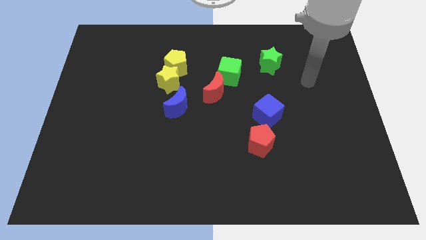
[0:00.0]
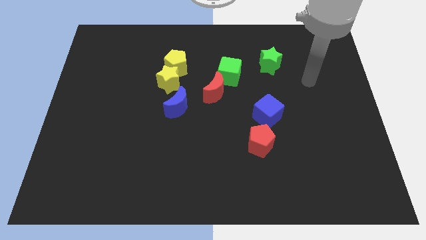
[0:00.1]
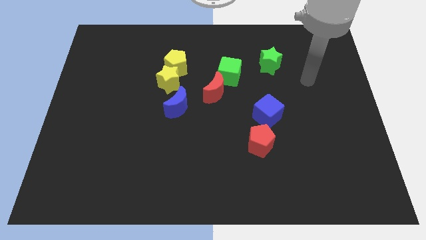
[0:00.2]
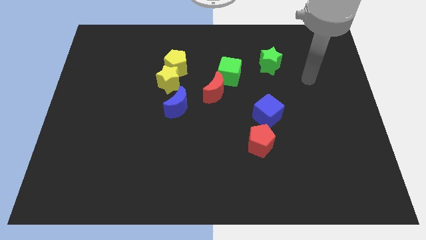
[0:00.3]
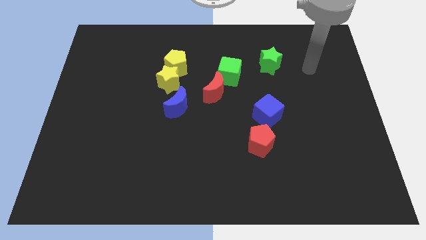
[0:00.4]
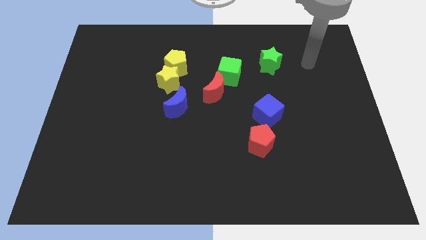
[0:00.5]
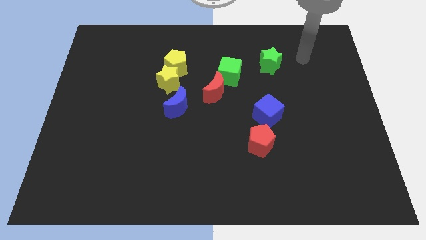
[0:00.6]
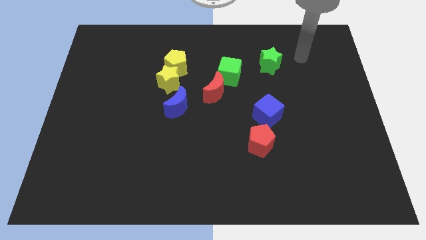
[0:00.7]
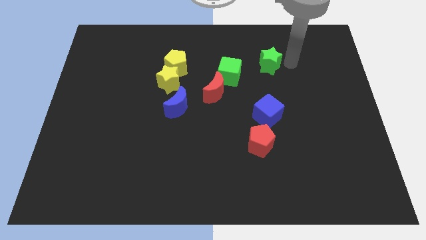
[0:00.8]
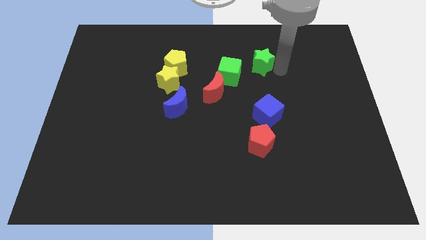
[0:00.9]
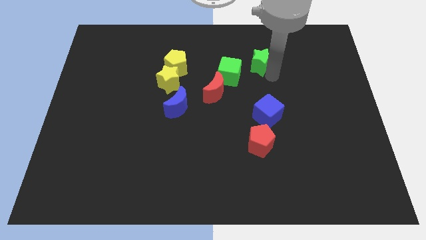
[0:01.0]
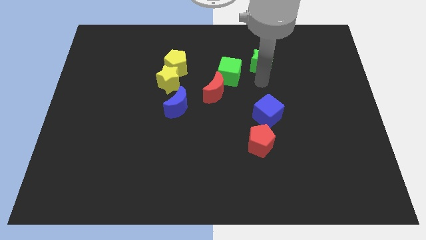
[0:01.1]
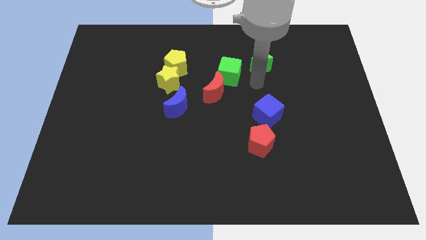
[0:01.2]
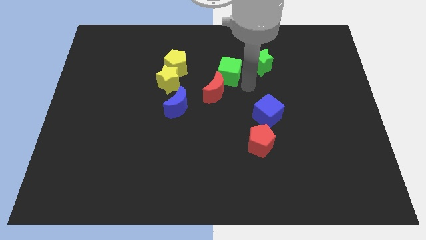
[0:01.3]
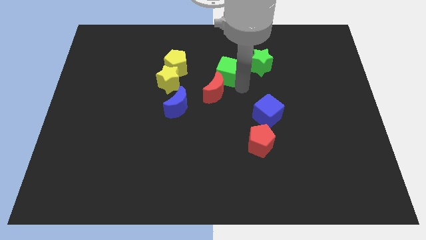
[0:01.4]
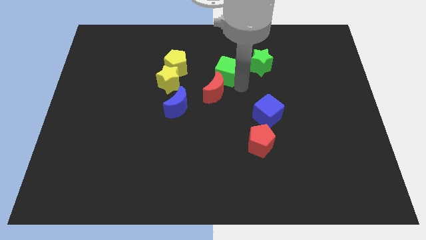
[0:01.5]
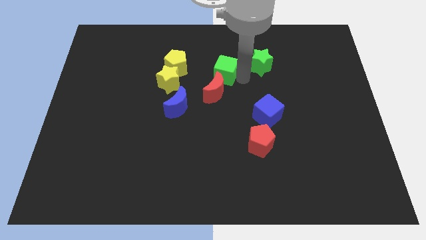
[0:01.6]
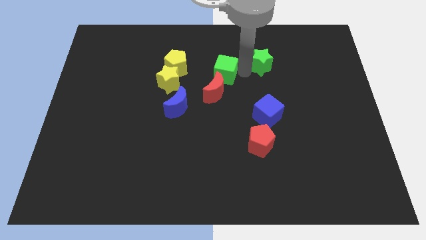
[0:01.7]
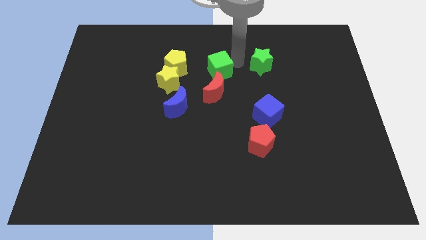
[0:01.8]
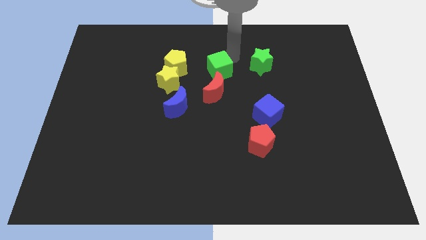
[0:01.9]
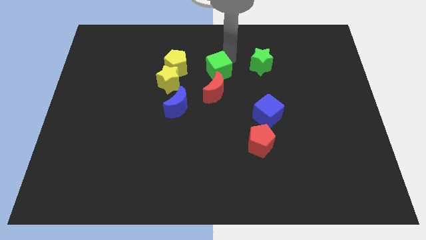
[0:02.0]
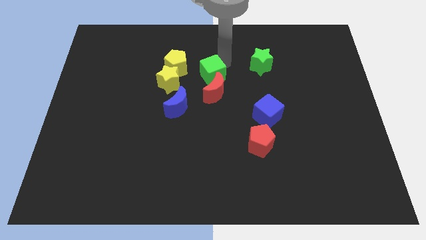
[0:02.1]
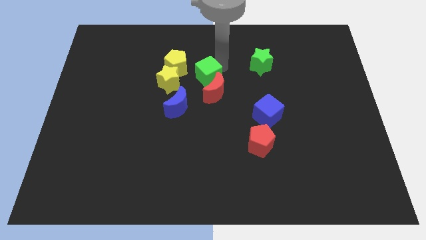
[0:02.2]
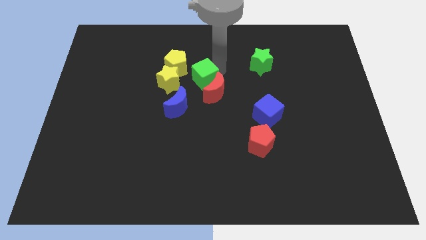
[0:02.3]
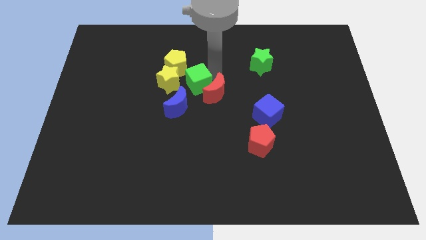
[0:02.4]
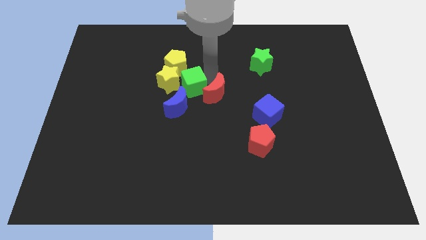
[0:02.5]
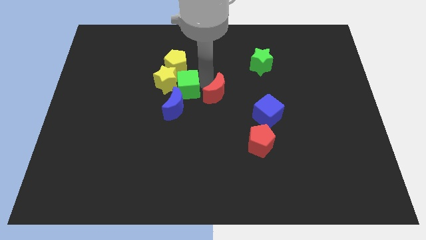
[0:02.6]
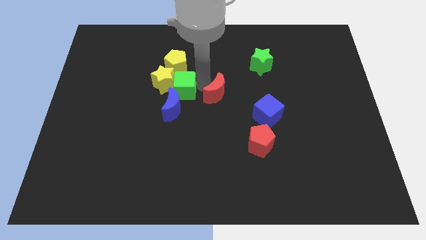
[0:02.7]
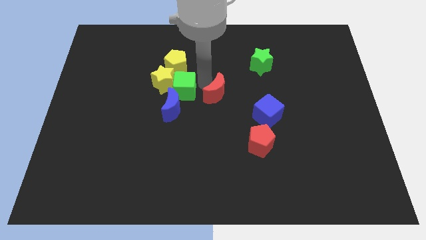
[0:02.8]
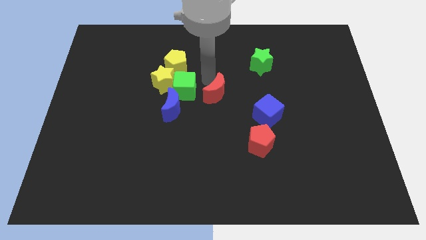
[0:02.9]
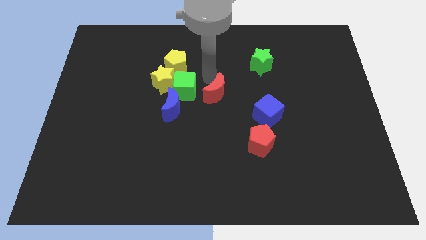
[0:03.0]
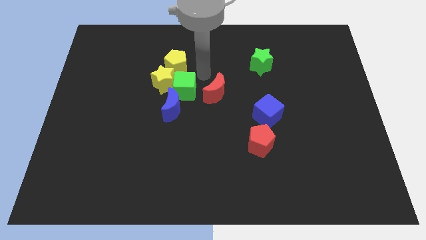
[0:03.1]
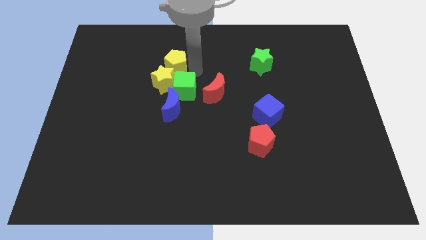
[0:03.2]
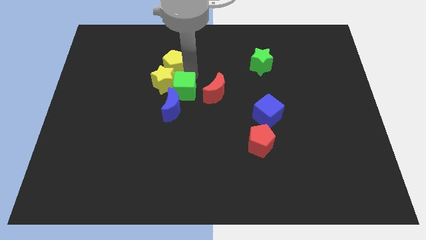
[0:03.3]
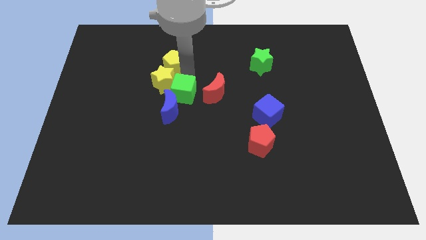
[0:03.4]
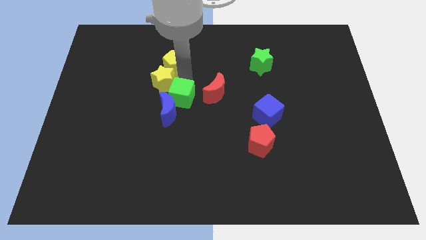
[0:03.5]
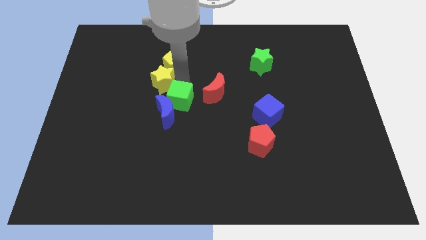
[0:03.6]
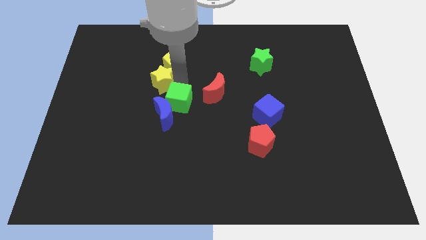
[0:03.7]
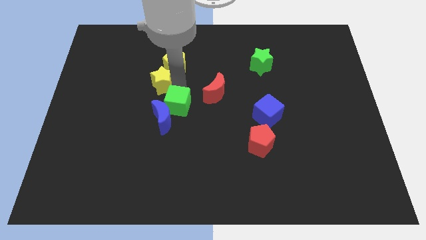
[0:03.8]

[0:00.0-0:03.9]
push the green cube to top right of blue crescent

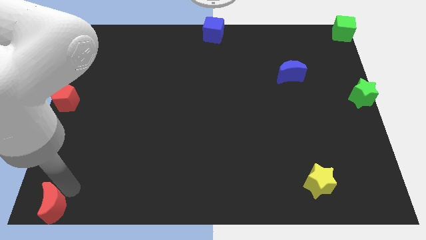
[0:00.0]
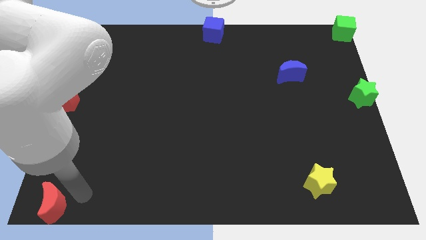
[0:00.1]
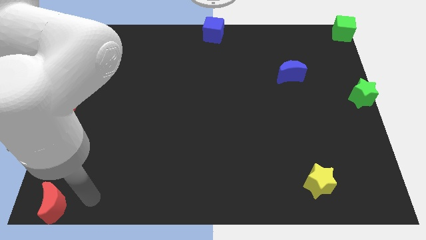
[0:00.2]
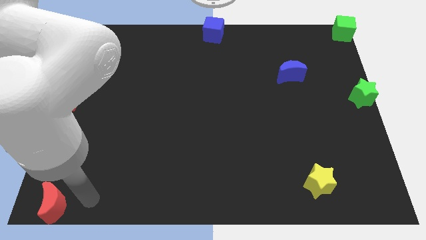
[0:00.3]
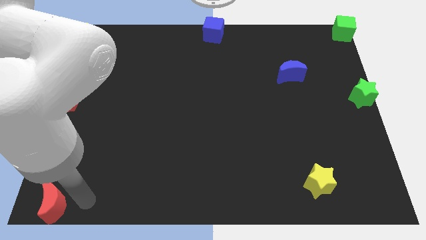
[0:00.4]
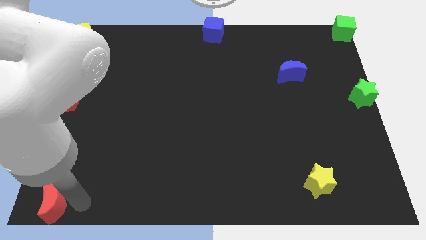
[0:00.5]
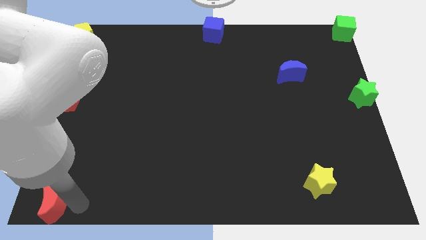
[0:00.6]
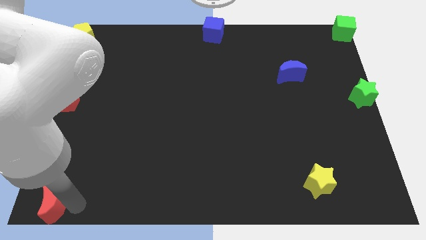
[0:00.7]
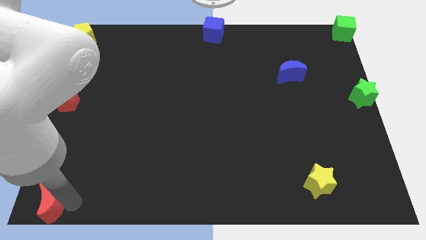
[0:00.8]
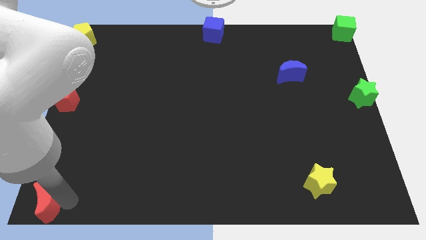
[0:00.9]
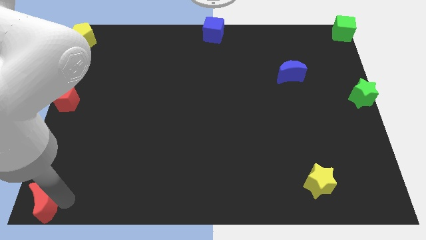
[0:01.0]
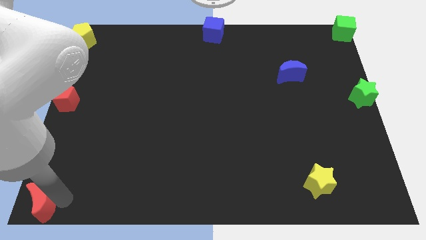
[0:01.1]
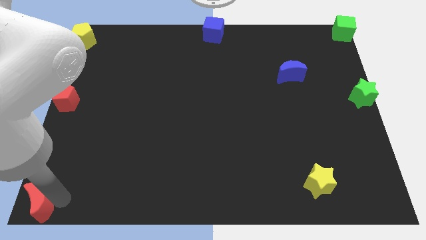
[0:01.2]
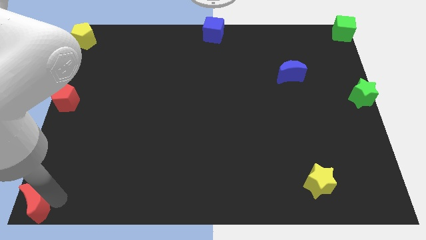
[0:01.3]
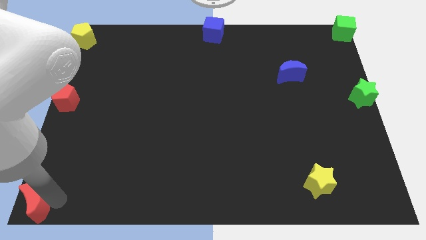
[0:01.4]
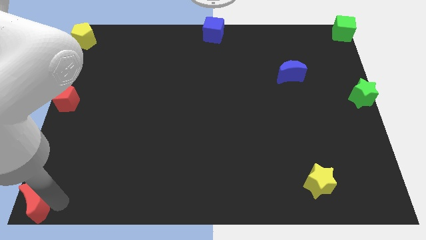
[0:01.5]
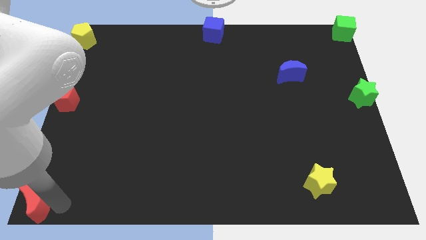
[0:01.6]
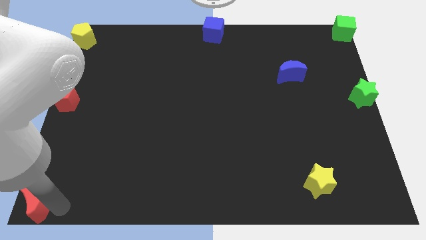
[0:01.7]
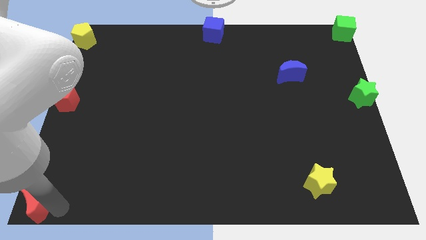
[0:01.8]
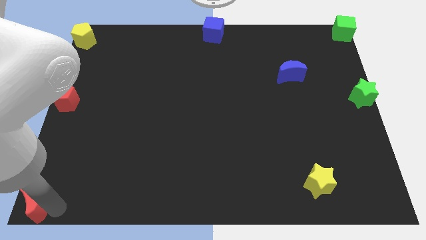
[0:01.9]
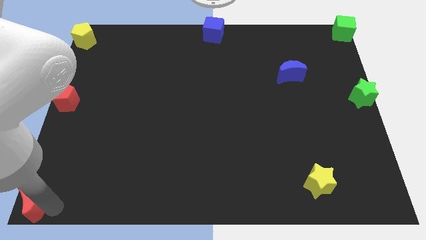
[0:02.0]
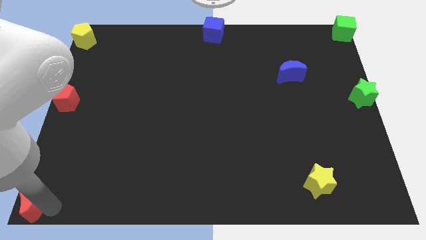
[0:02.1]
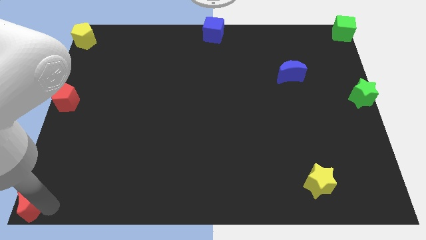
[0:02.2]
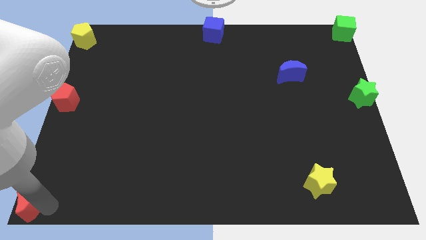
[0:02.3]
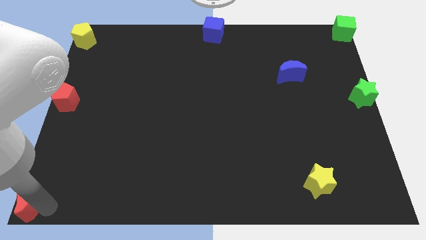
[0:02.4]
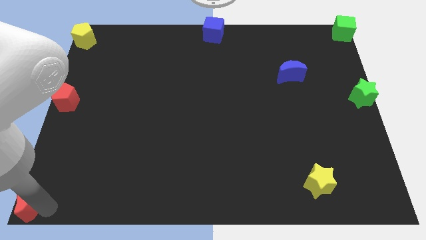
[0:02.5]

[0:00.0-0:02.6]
push the red crescent to the left bottom end

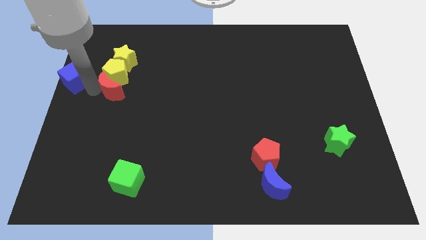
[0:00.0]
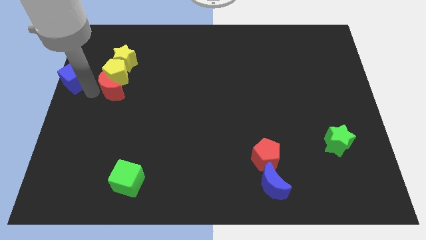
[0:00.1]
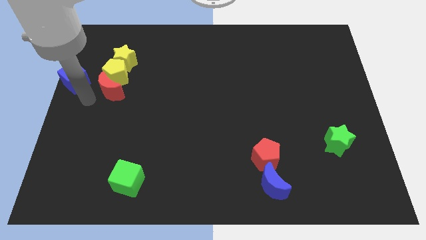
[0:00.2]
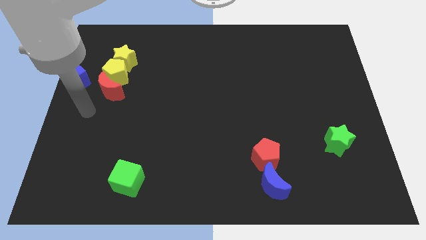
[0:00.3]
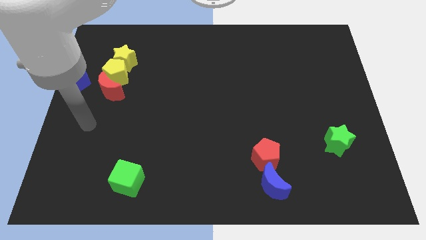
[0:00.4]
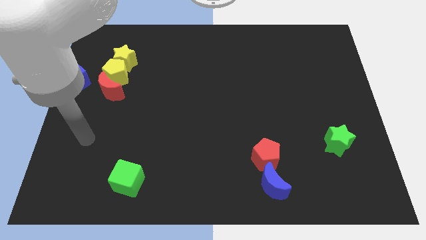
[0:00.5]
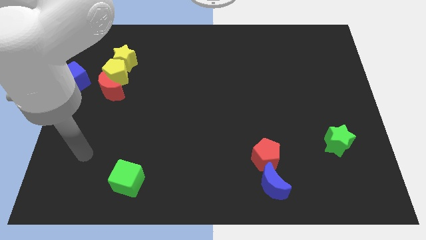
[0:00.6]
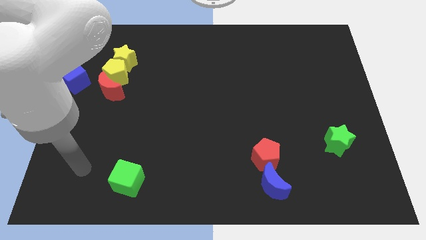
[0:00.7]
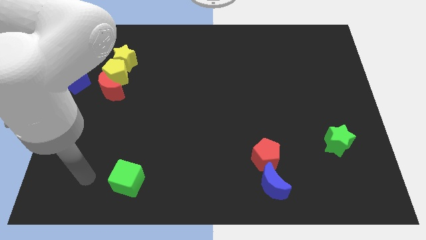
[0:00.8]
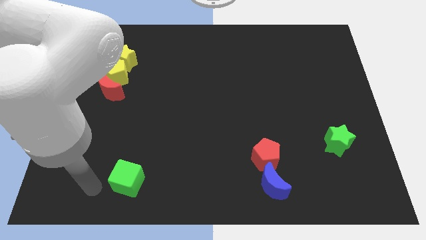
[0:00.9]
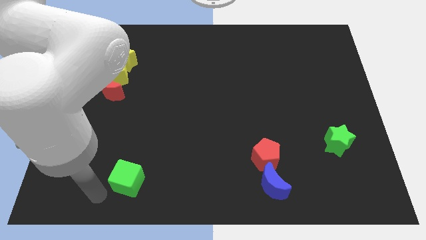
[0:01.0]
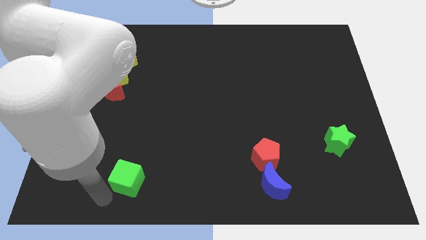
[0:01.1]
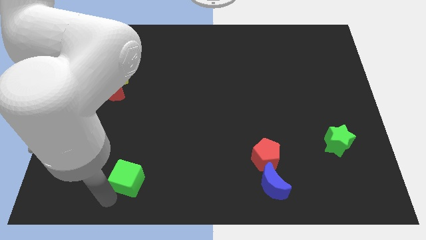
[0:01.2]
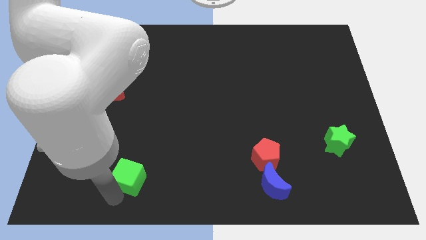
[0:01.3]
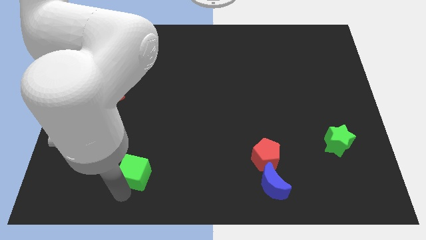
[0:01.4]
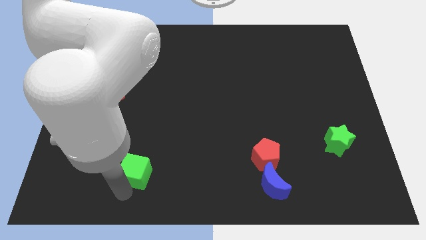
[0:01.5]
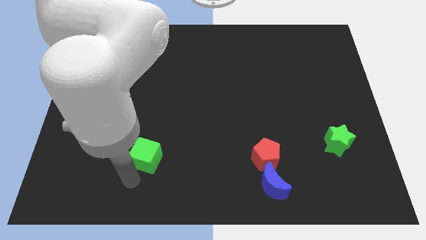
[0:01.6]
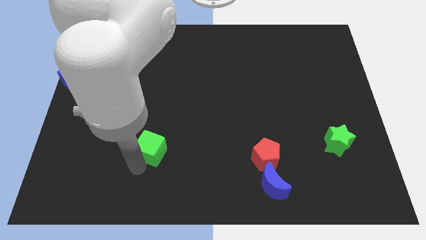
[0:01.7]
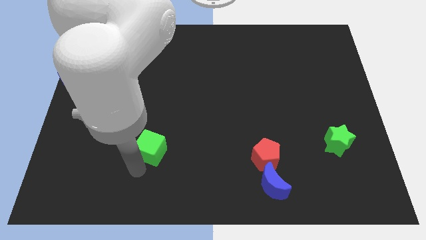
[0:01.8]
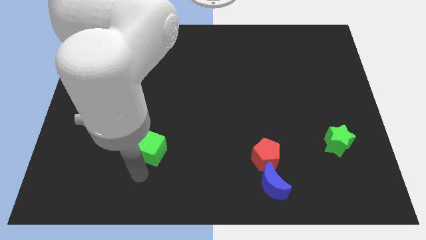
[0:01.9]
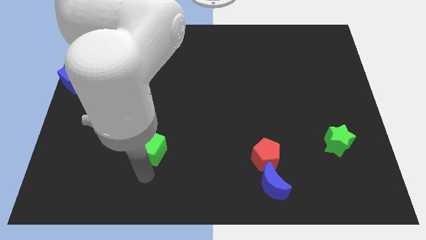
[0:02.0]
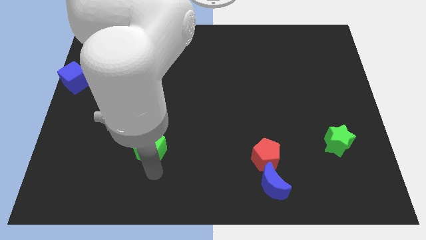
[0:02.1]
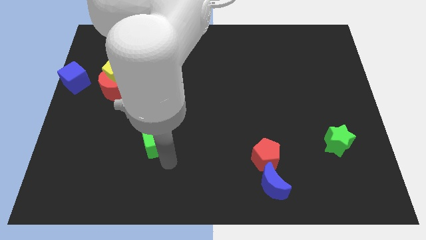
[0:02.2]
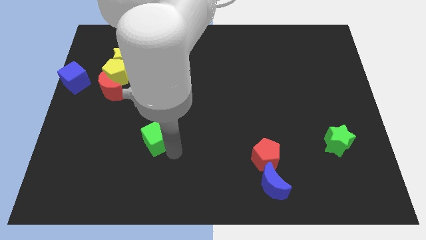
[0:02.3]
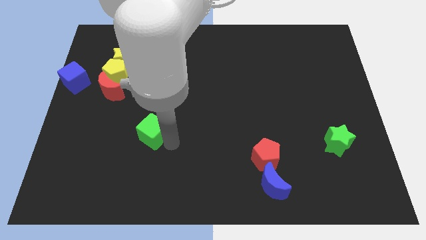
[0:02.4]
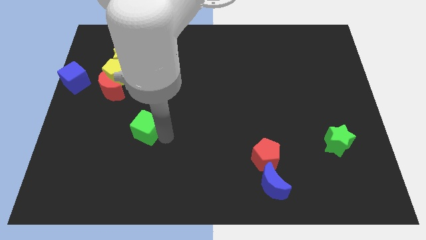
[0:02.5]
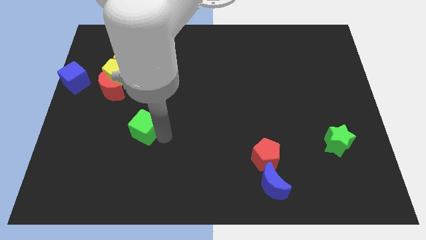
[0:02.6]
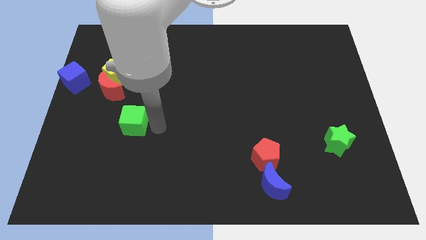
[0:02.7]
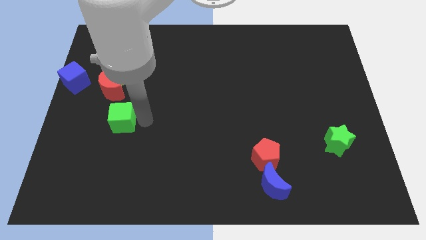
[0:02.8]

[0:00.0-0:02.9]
put the green cube parallel to blue cube
